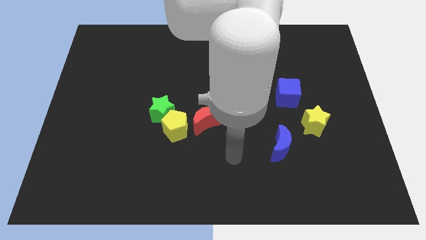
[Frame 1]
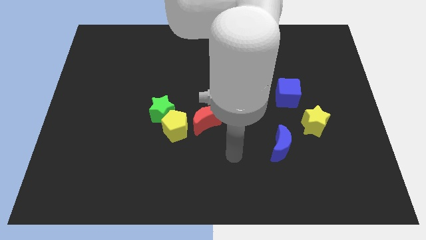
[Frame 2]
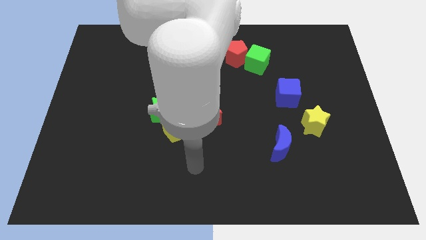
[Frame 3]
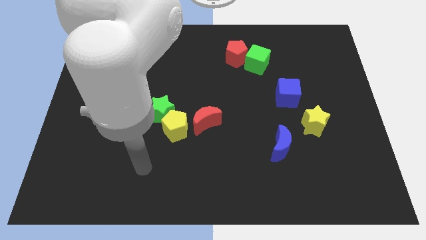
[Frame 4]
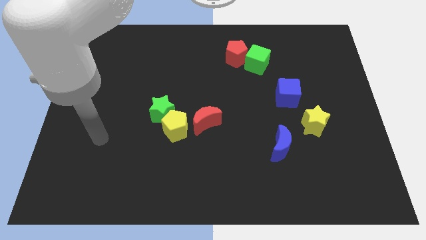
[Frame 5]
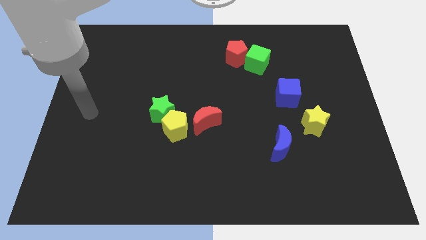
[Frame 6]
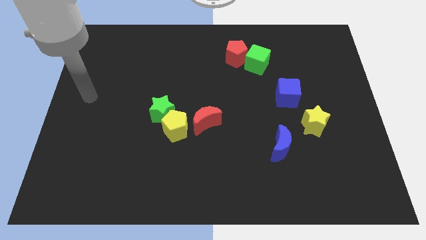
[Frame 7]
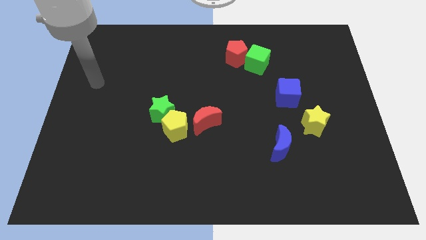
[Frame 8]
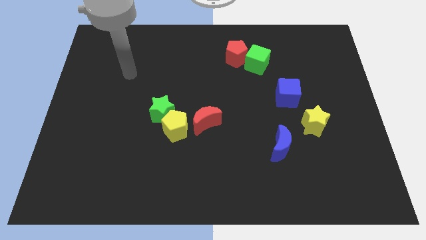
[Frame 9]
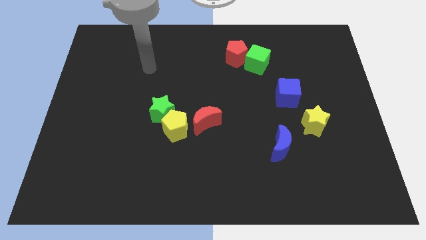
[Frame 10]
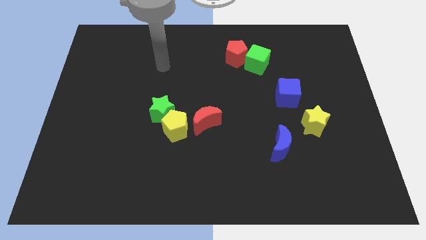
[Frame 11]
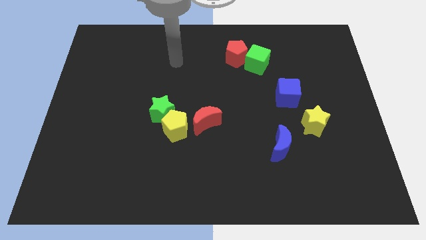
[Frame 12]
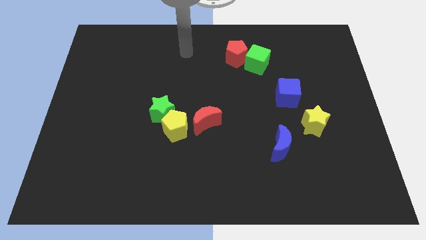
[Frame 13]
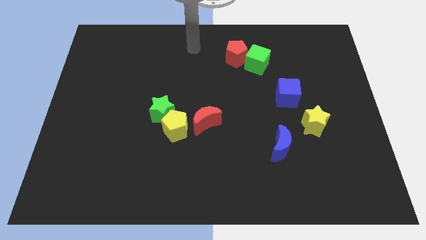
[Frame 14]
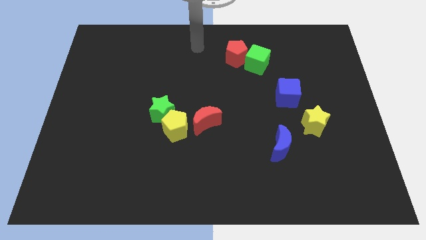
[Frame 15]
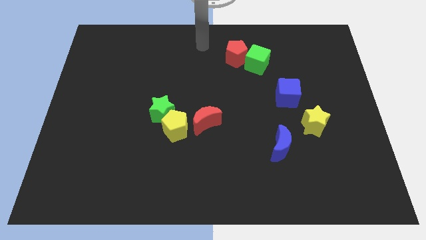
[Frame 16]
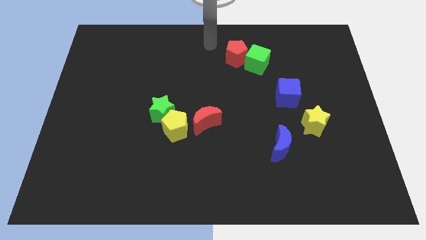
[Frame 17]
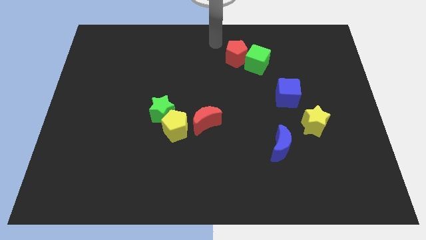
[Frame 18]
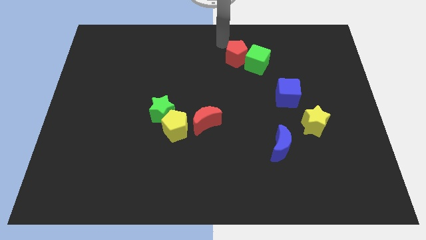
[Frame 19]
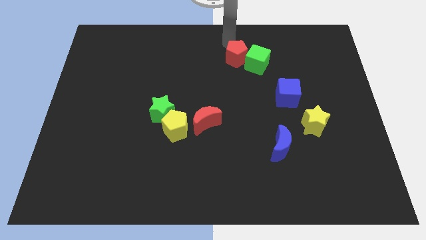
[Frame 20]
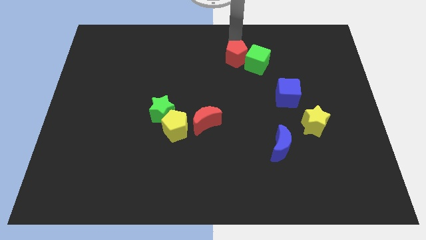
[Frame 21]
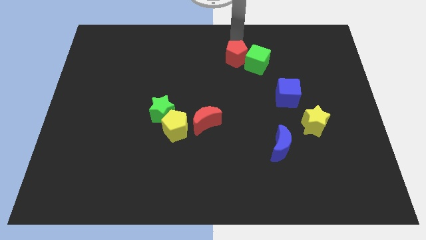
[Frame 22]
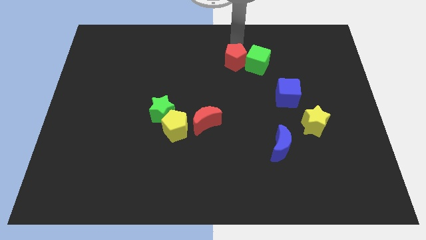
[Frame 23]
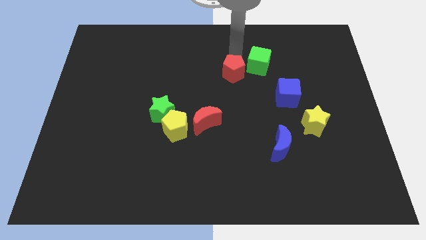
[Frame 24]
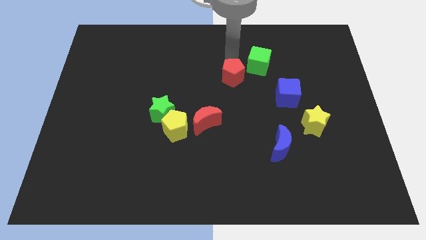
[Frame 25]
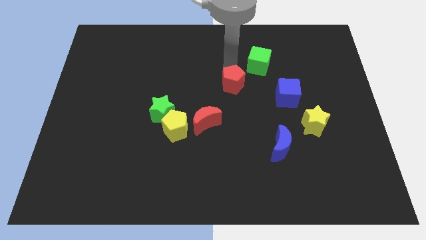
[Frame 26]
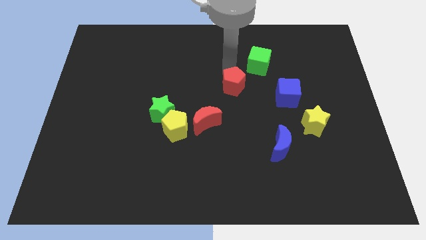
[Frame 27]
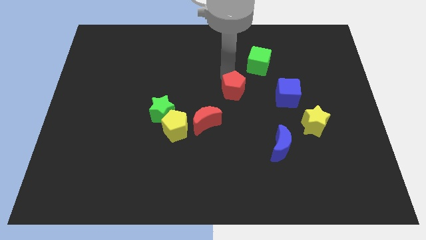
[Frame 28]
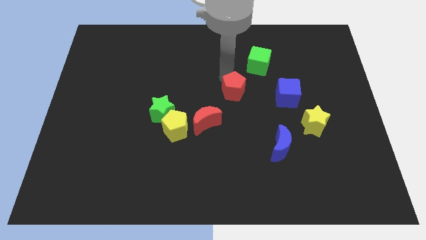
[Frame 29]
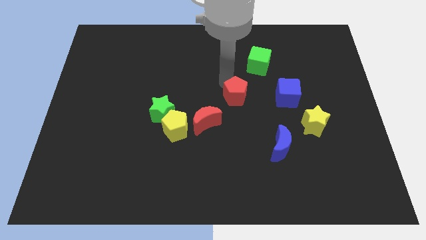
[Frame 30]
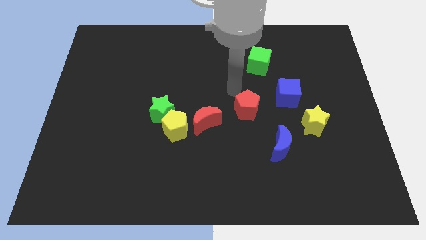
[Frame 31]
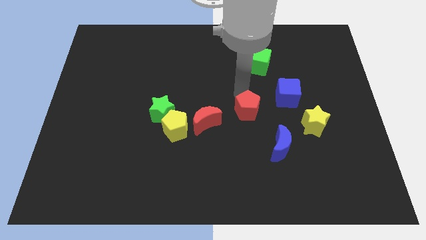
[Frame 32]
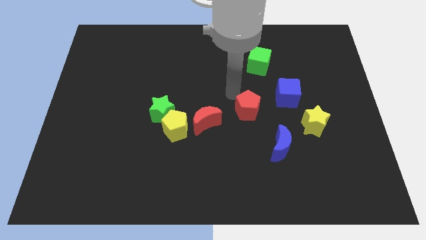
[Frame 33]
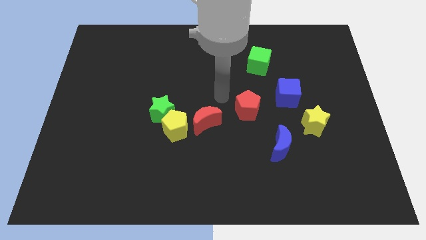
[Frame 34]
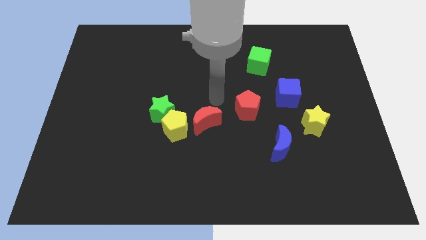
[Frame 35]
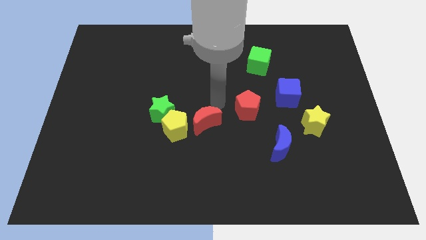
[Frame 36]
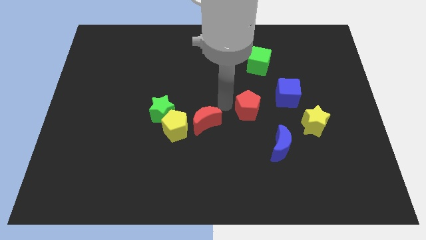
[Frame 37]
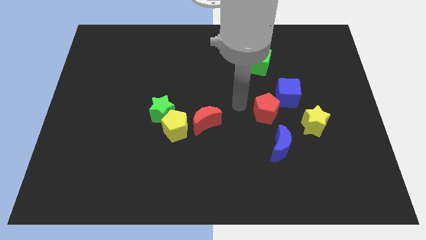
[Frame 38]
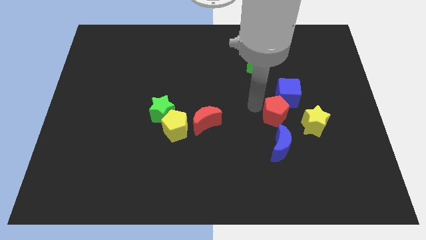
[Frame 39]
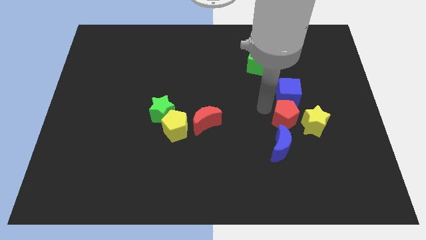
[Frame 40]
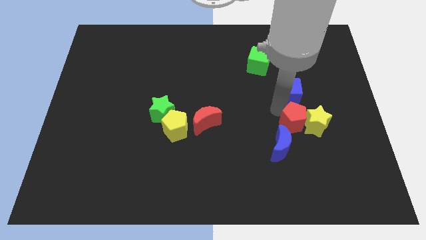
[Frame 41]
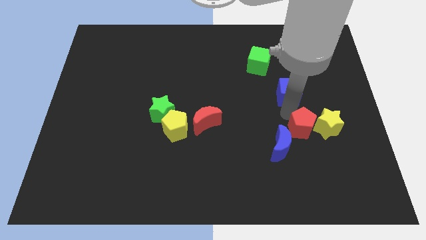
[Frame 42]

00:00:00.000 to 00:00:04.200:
push the red pentagon to the yellow star

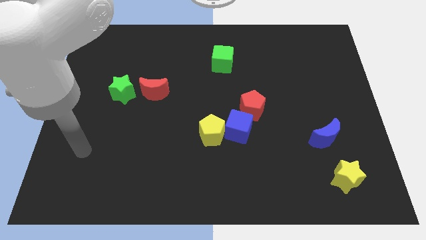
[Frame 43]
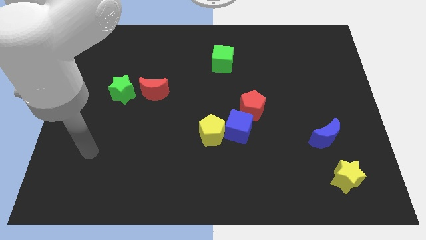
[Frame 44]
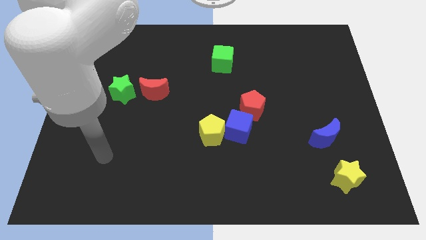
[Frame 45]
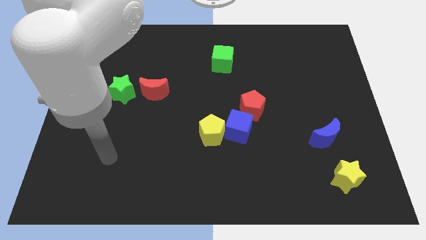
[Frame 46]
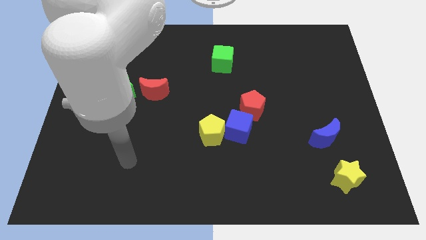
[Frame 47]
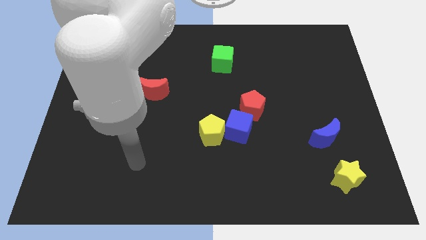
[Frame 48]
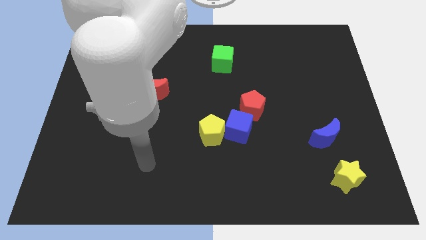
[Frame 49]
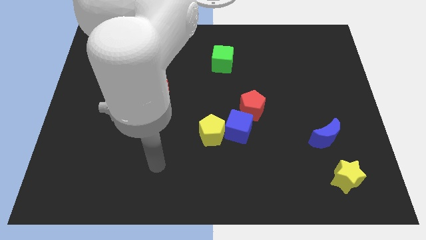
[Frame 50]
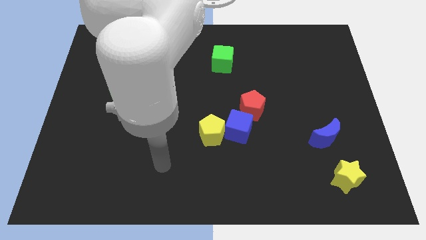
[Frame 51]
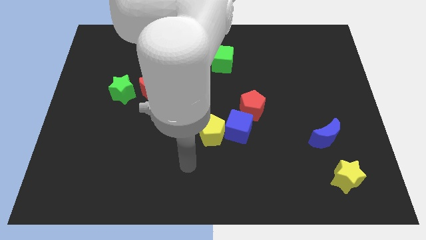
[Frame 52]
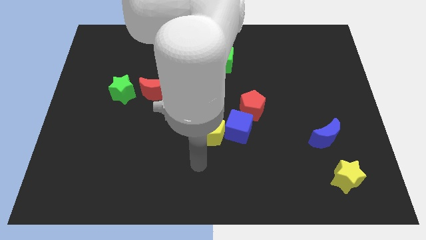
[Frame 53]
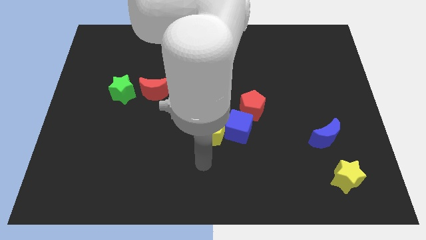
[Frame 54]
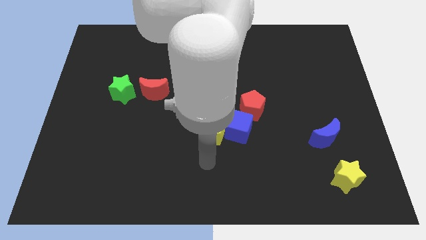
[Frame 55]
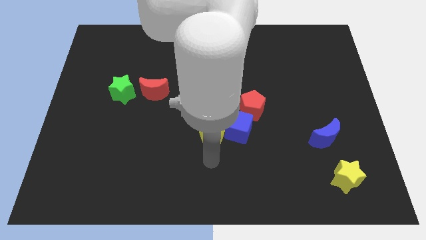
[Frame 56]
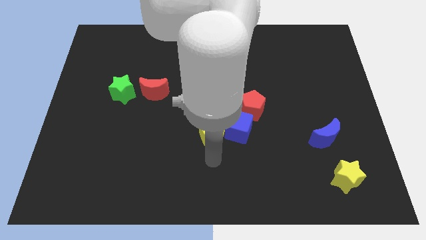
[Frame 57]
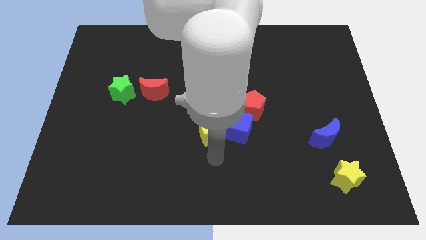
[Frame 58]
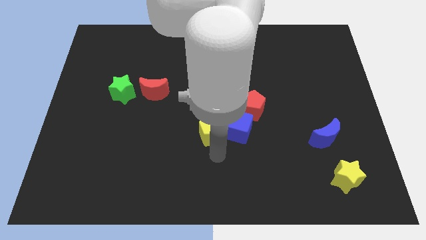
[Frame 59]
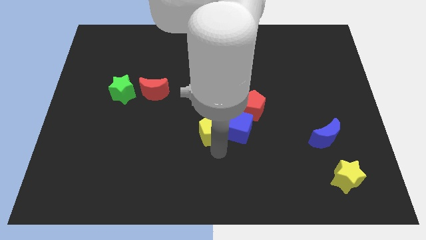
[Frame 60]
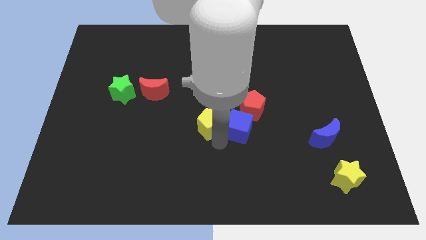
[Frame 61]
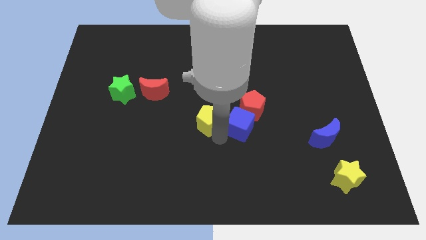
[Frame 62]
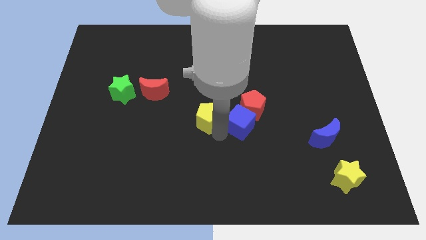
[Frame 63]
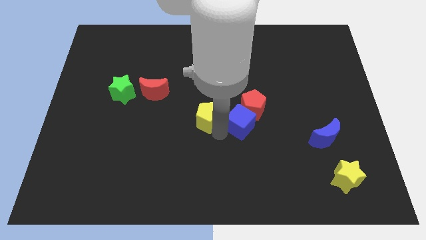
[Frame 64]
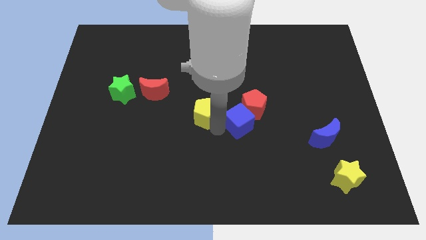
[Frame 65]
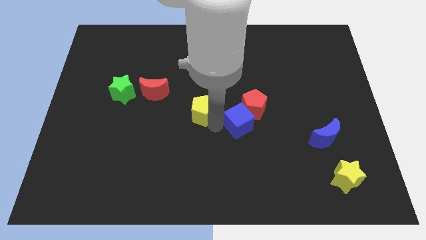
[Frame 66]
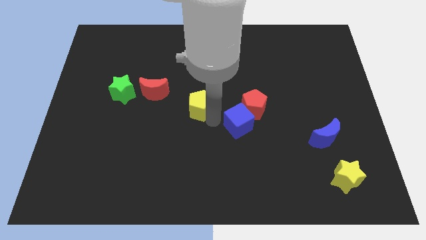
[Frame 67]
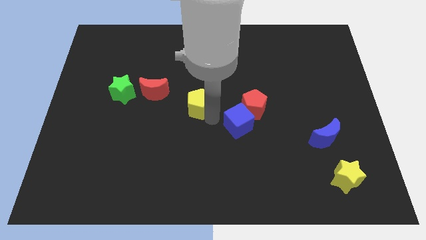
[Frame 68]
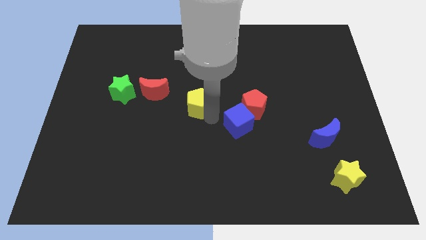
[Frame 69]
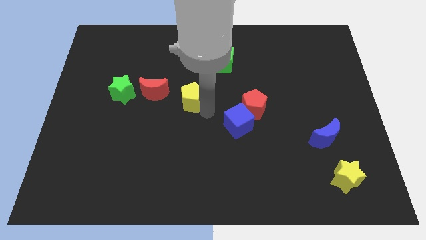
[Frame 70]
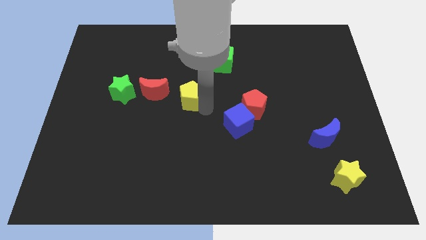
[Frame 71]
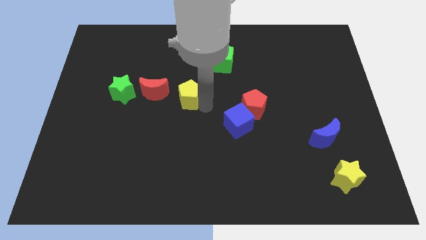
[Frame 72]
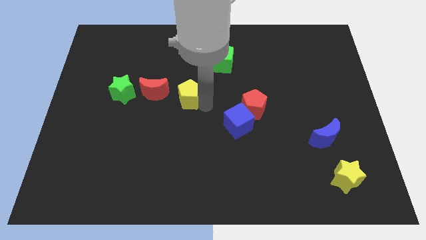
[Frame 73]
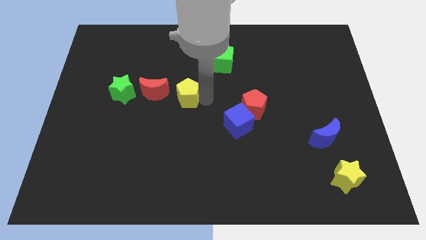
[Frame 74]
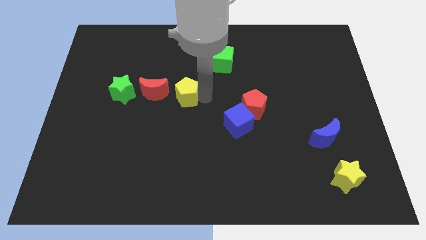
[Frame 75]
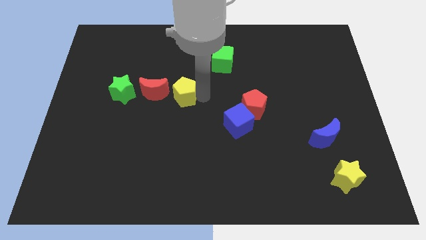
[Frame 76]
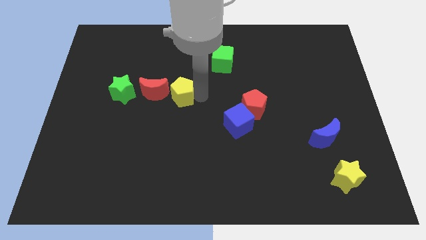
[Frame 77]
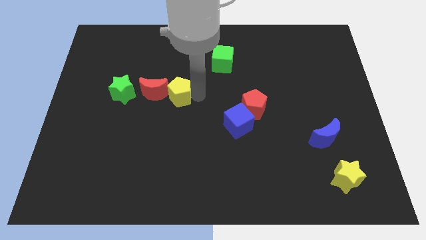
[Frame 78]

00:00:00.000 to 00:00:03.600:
push the yellow pentagon to the red moon

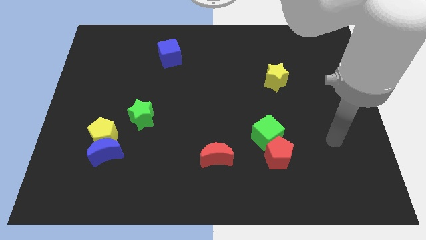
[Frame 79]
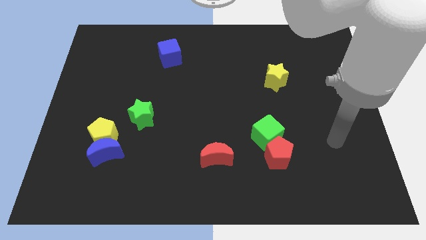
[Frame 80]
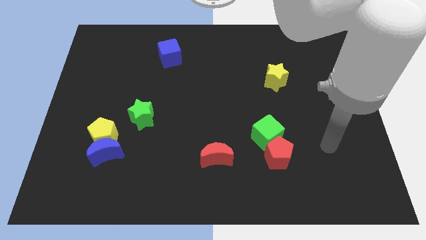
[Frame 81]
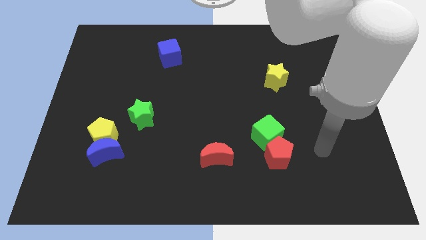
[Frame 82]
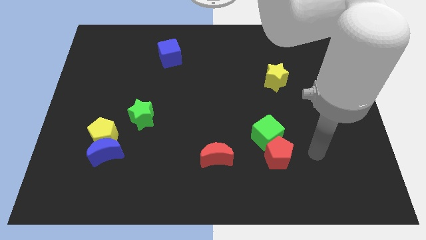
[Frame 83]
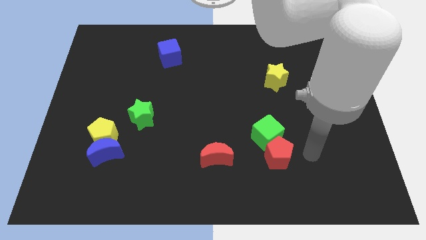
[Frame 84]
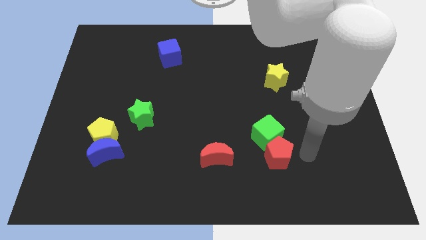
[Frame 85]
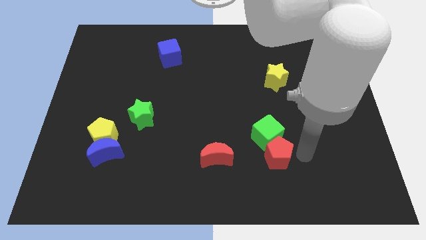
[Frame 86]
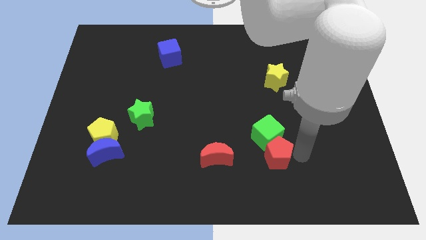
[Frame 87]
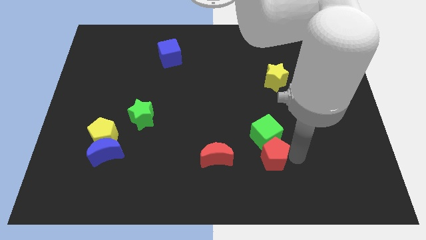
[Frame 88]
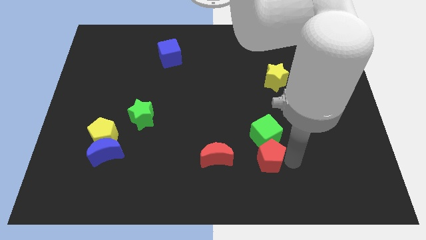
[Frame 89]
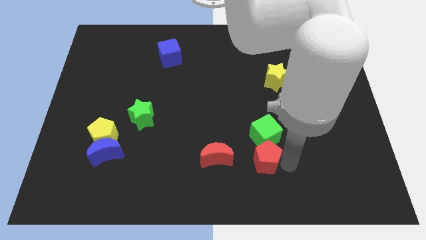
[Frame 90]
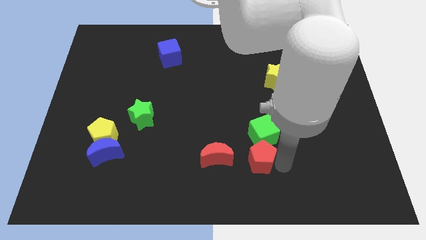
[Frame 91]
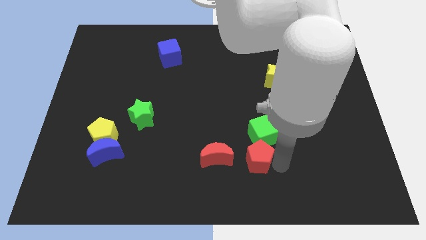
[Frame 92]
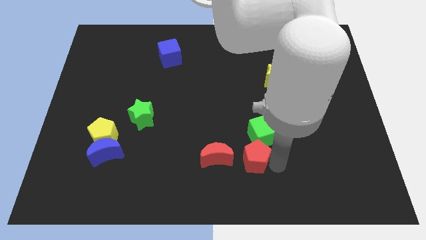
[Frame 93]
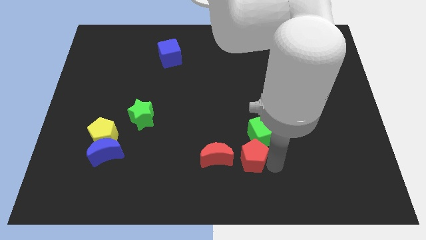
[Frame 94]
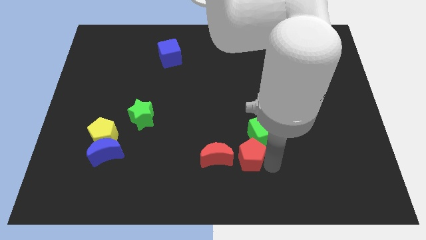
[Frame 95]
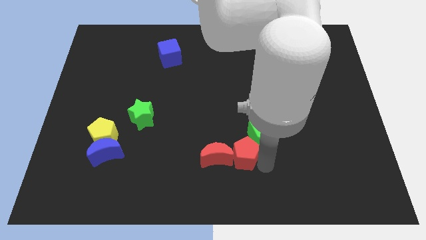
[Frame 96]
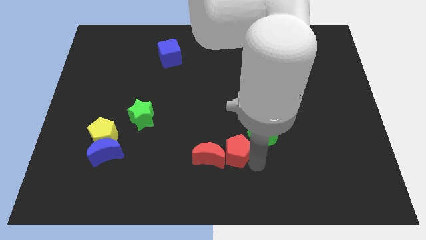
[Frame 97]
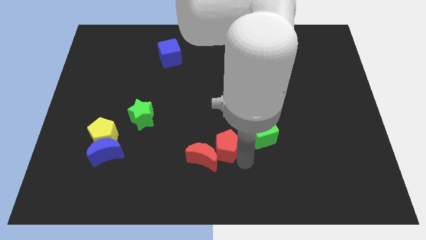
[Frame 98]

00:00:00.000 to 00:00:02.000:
push the red pentagon close to the red moon
